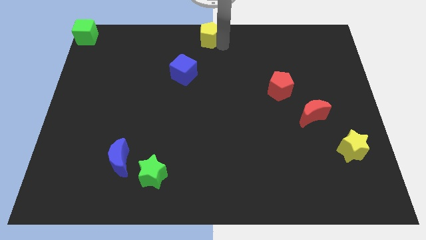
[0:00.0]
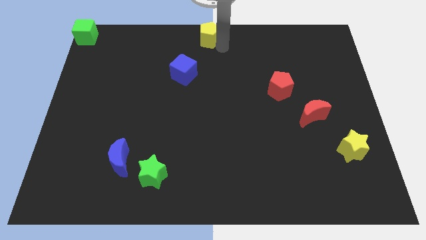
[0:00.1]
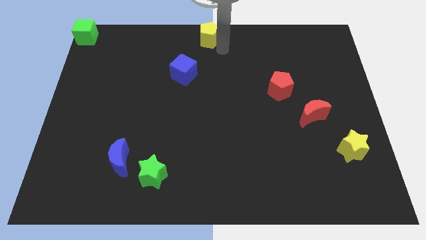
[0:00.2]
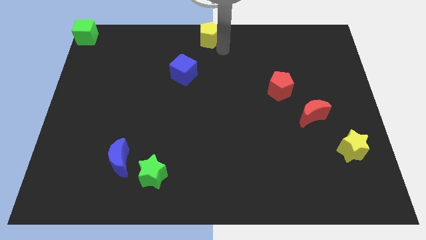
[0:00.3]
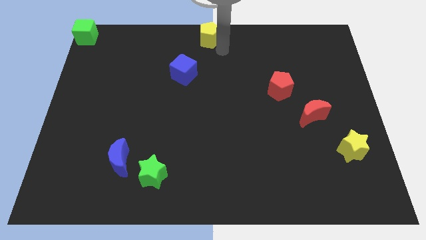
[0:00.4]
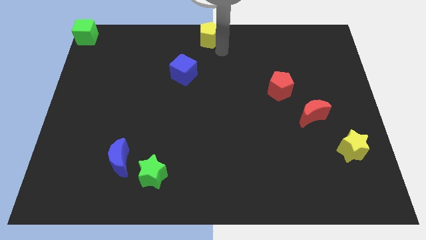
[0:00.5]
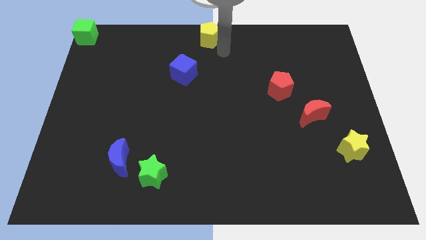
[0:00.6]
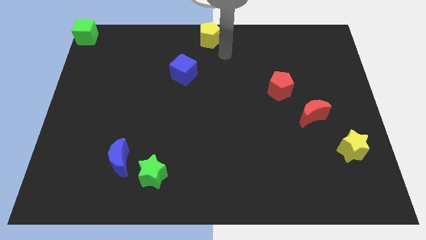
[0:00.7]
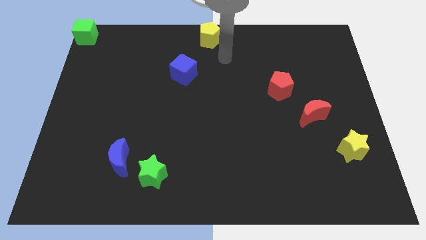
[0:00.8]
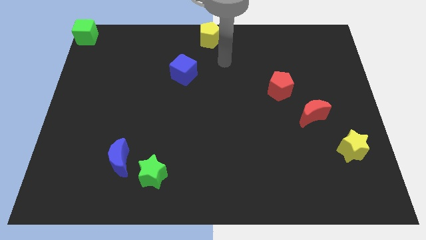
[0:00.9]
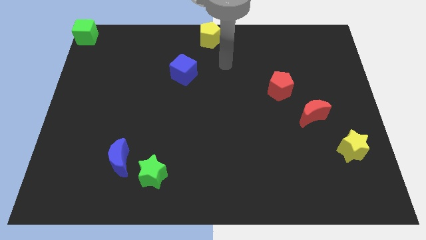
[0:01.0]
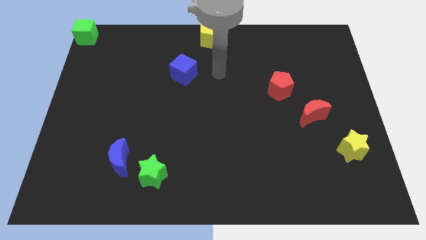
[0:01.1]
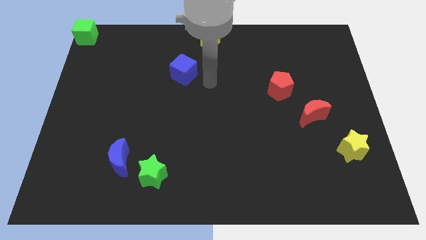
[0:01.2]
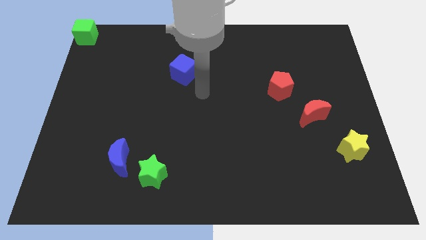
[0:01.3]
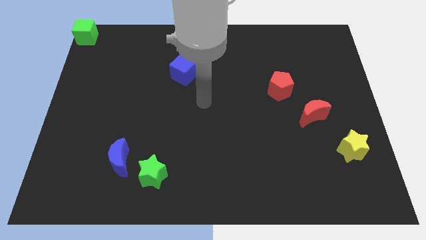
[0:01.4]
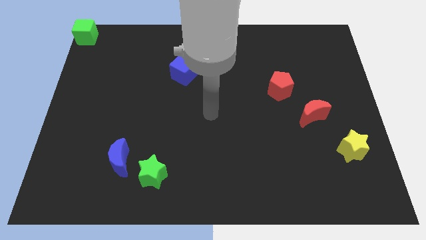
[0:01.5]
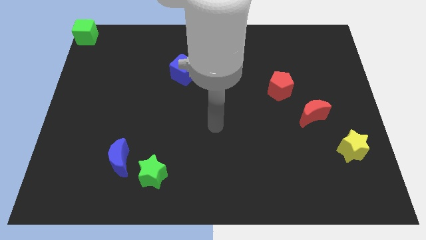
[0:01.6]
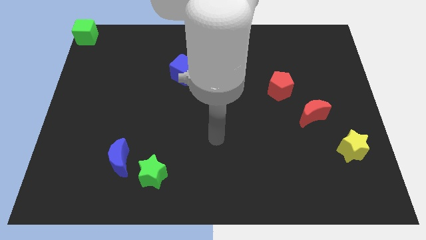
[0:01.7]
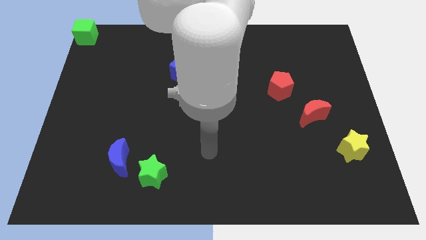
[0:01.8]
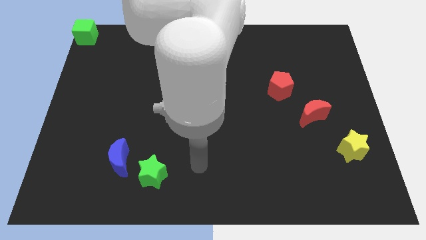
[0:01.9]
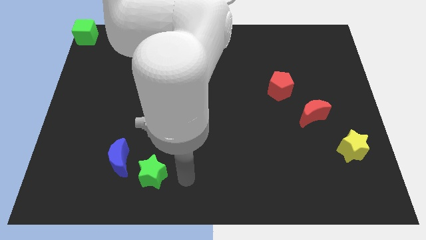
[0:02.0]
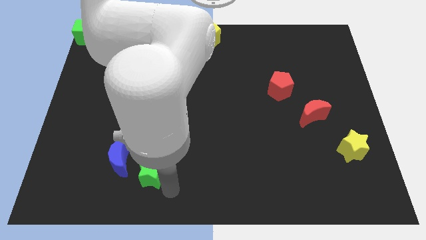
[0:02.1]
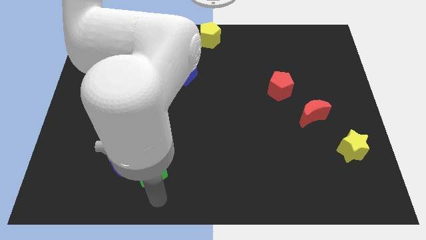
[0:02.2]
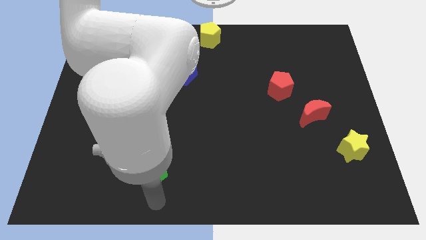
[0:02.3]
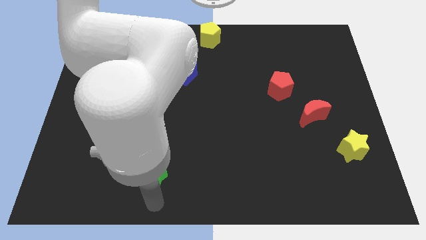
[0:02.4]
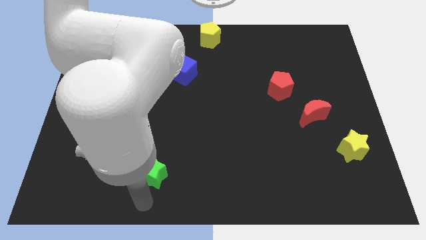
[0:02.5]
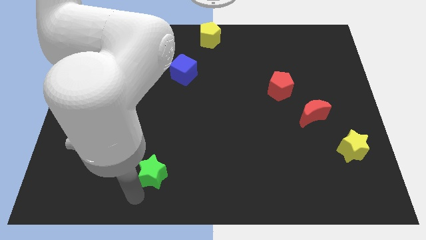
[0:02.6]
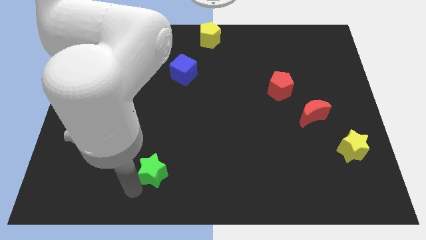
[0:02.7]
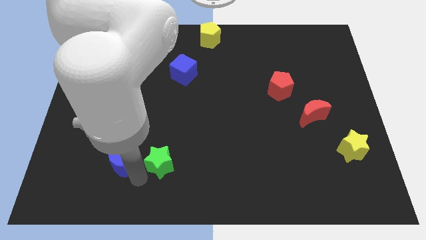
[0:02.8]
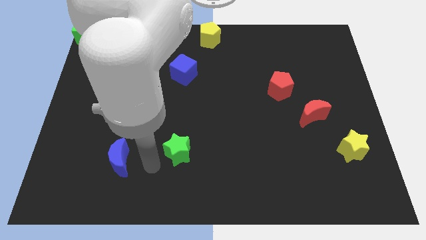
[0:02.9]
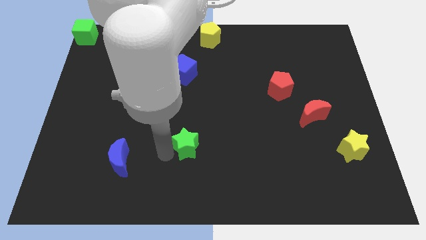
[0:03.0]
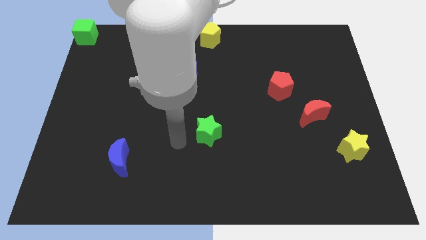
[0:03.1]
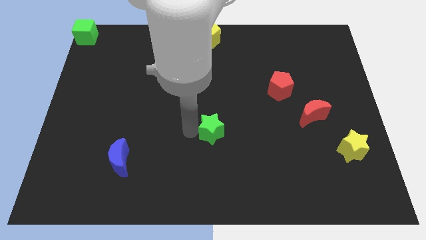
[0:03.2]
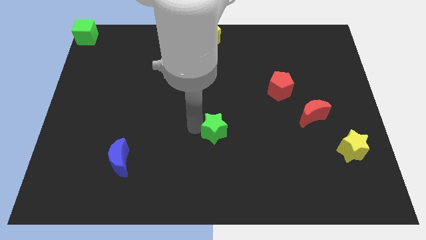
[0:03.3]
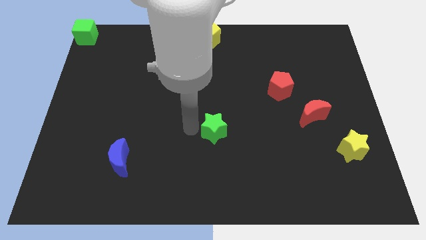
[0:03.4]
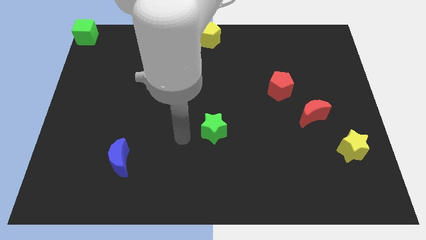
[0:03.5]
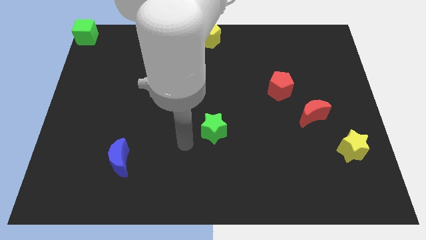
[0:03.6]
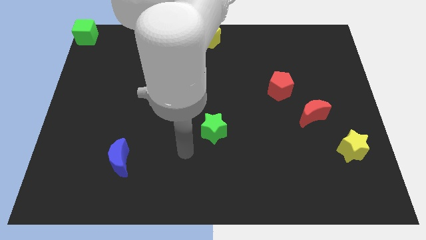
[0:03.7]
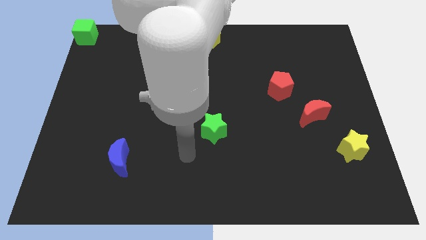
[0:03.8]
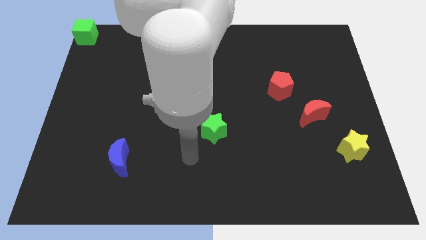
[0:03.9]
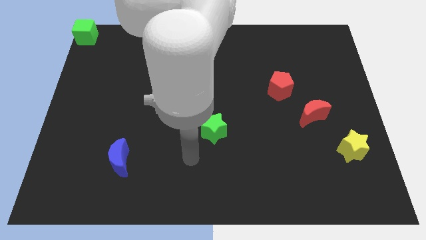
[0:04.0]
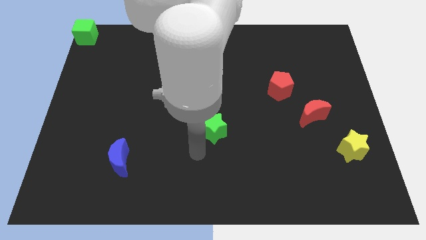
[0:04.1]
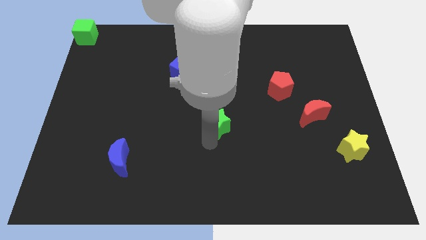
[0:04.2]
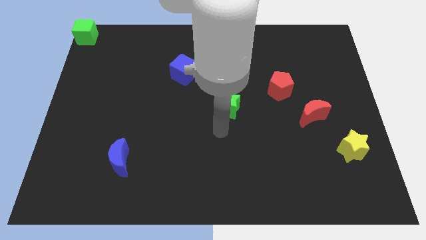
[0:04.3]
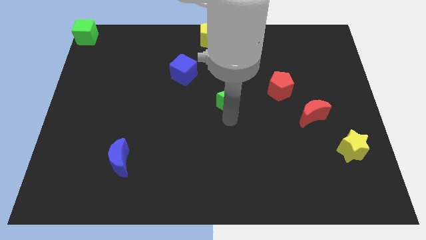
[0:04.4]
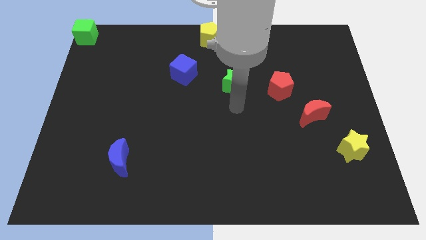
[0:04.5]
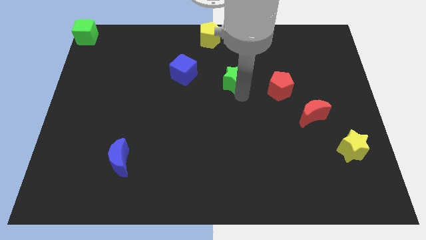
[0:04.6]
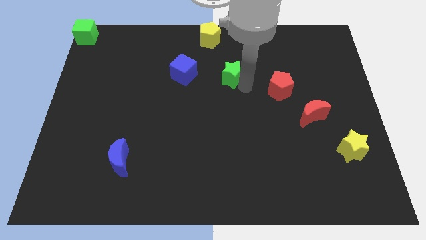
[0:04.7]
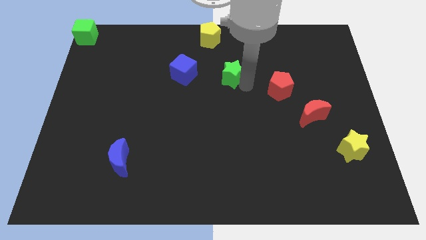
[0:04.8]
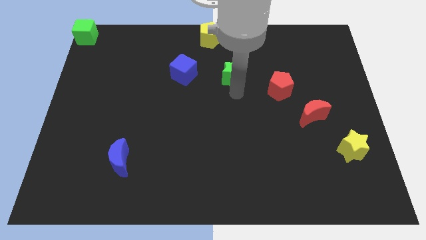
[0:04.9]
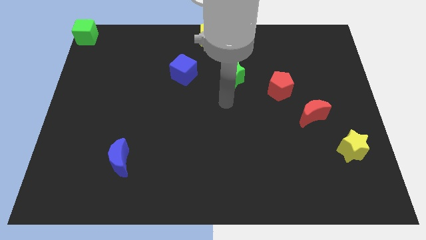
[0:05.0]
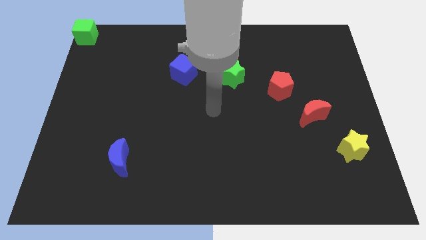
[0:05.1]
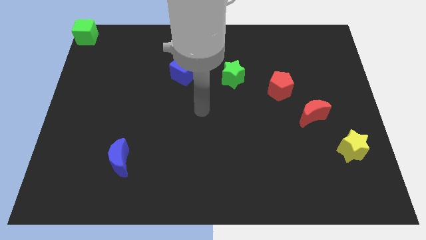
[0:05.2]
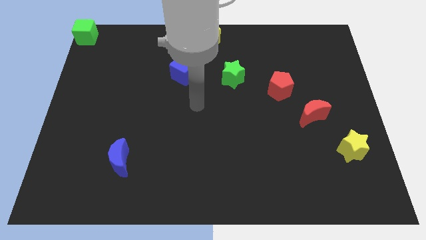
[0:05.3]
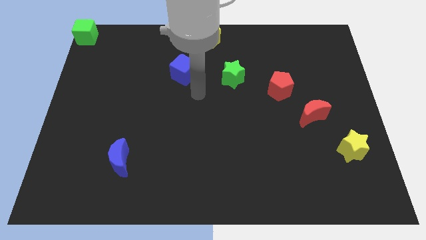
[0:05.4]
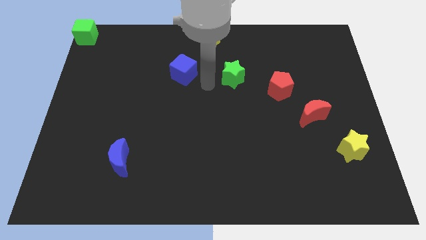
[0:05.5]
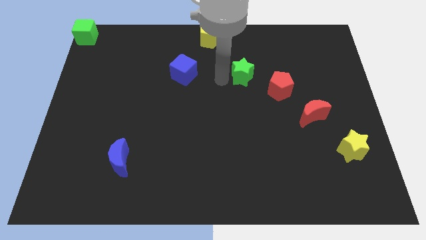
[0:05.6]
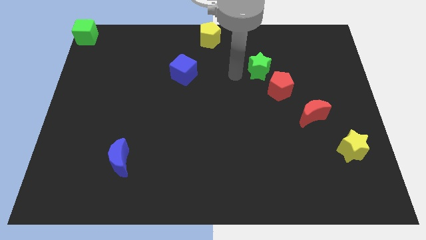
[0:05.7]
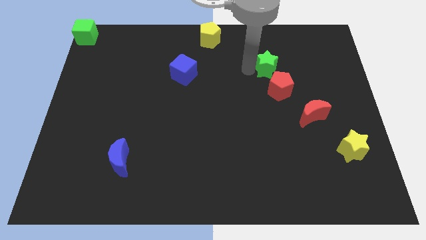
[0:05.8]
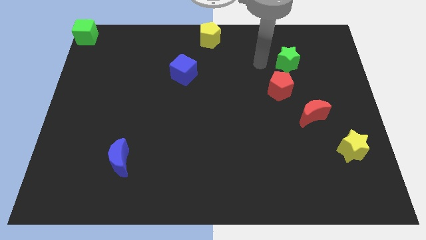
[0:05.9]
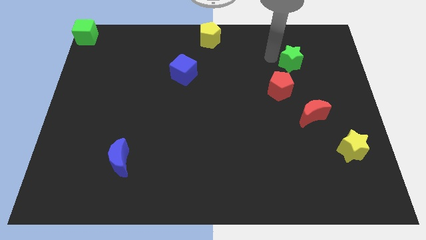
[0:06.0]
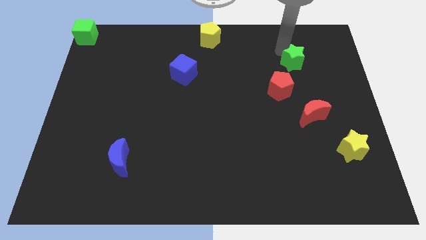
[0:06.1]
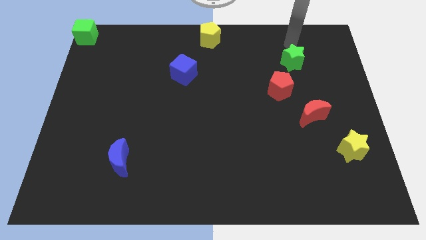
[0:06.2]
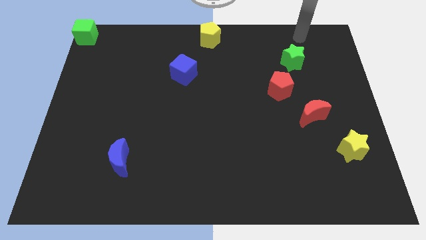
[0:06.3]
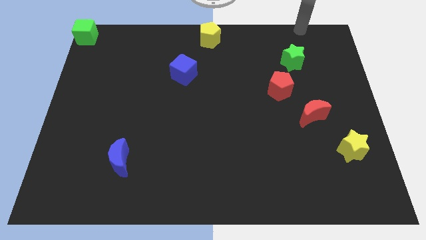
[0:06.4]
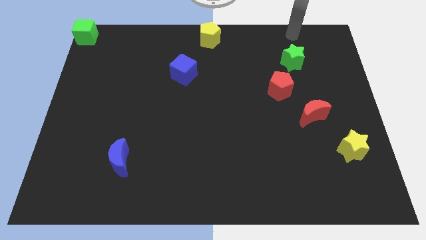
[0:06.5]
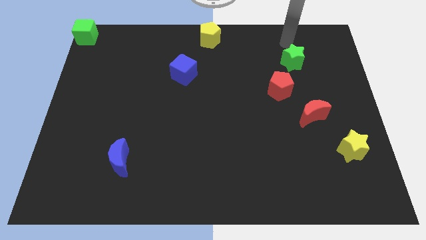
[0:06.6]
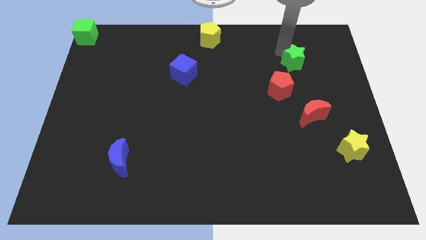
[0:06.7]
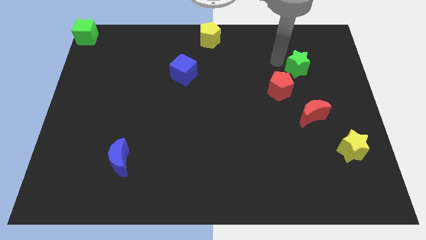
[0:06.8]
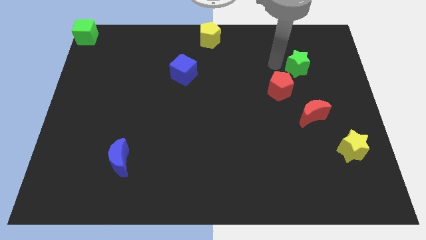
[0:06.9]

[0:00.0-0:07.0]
place the green star above the red crescent

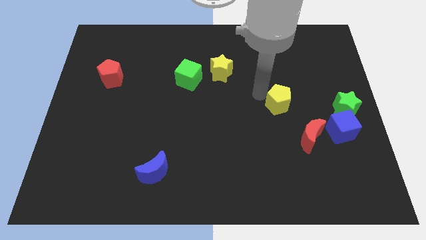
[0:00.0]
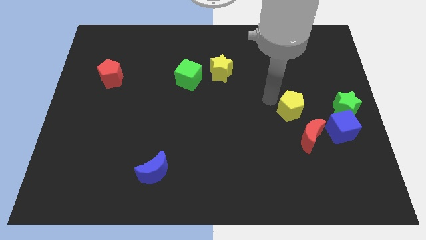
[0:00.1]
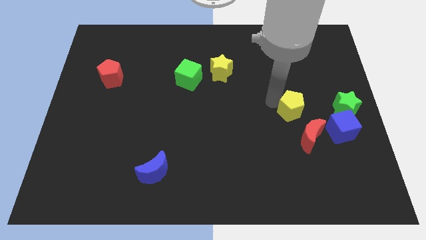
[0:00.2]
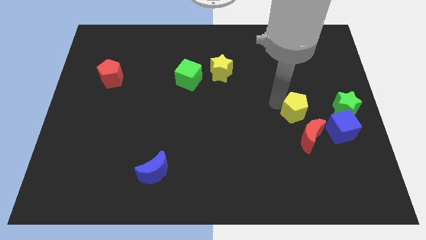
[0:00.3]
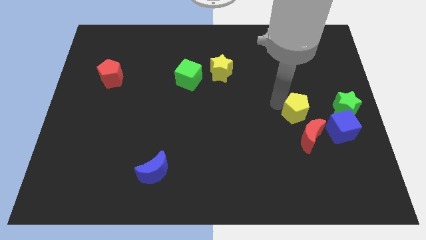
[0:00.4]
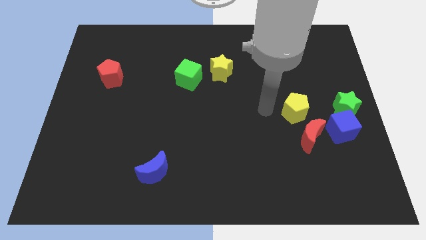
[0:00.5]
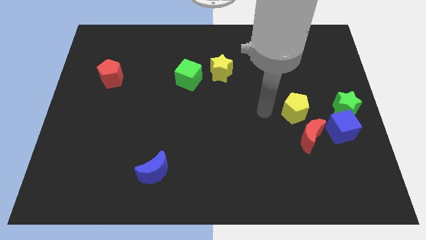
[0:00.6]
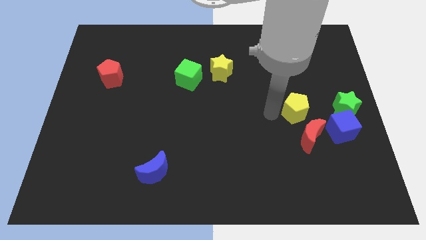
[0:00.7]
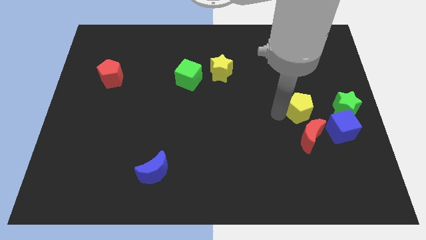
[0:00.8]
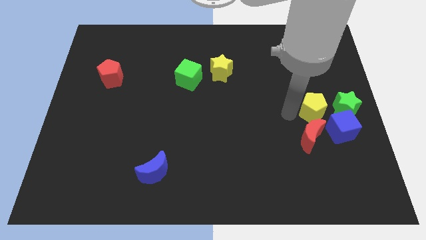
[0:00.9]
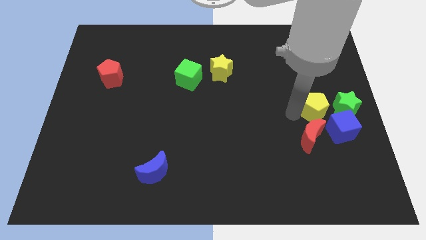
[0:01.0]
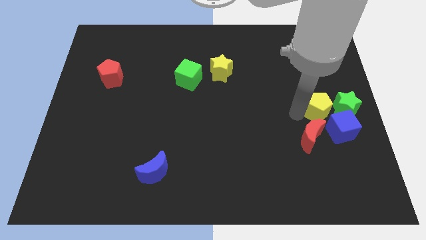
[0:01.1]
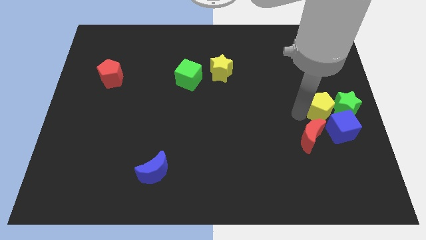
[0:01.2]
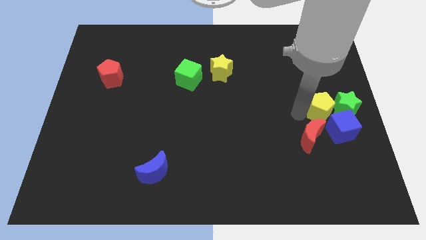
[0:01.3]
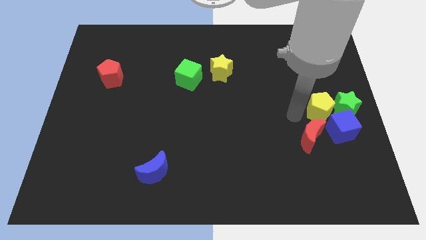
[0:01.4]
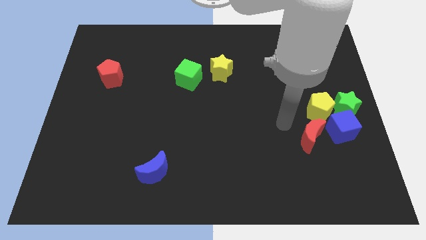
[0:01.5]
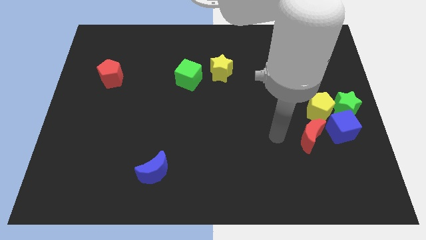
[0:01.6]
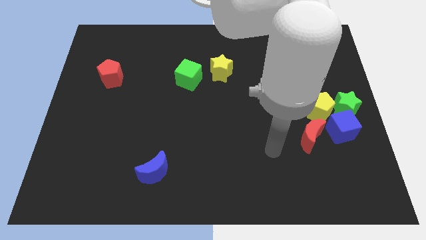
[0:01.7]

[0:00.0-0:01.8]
move the yellow pentagon into the green star

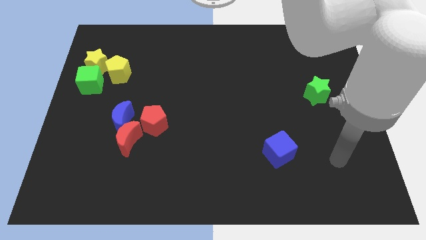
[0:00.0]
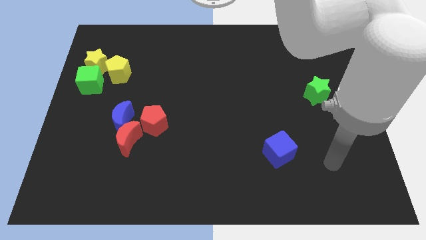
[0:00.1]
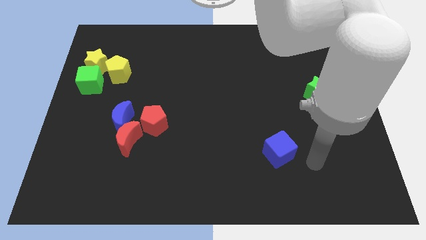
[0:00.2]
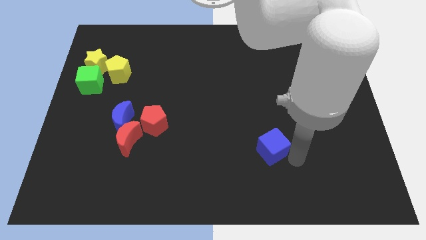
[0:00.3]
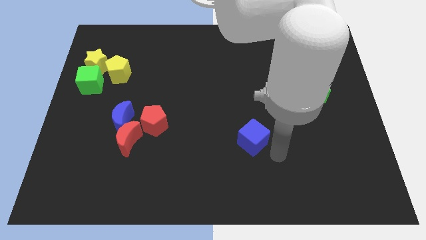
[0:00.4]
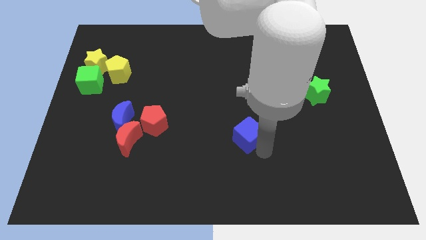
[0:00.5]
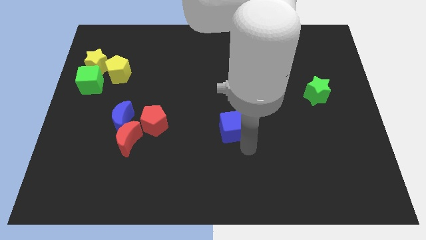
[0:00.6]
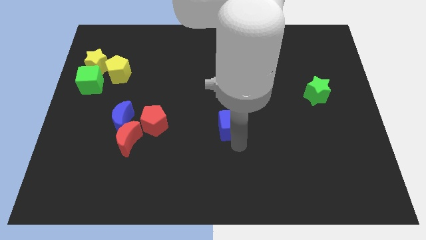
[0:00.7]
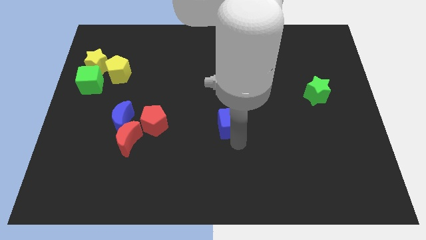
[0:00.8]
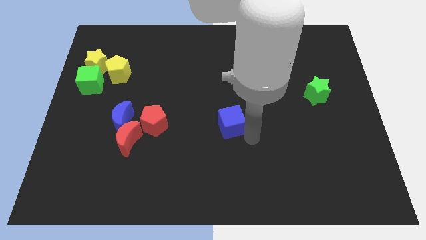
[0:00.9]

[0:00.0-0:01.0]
push blue cube beside red pentagon
